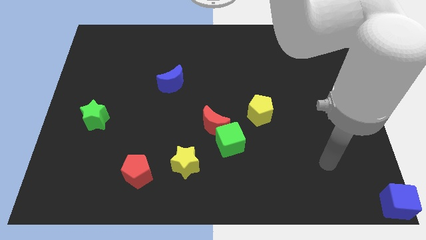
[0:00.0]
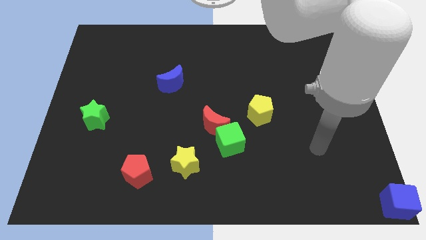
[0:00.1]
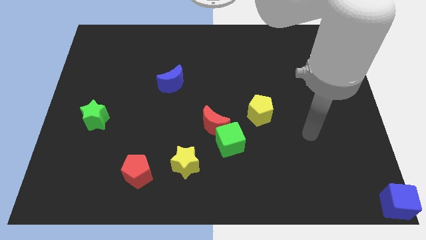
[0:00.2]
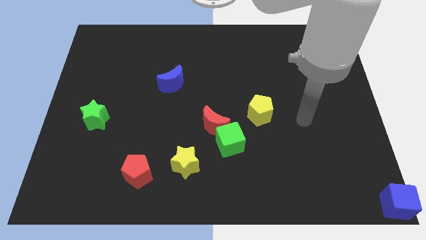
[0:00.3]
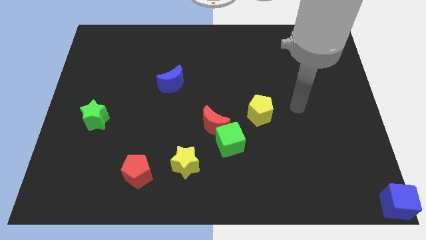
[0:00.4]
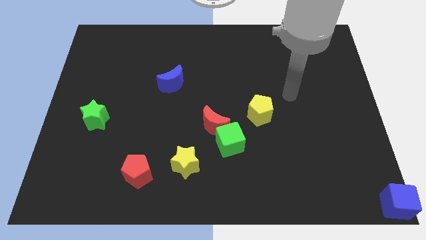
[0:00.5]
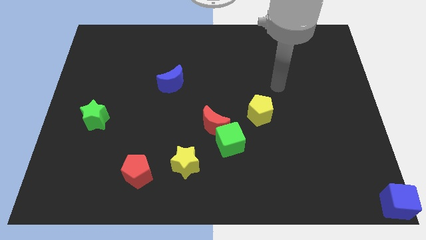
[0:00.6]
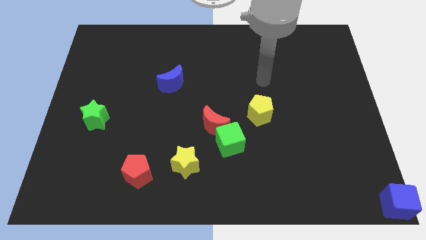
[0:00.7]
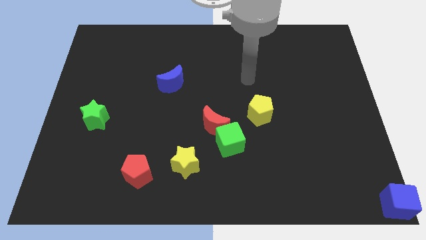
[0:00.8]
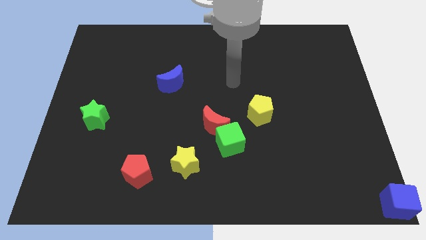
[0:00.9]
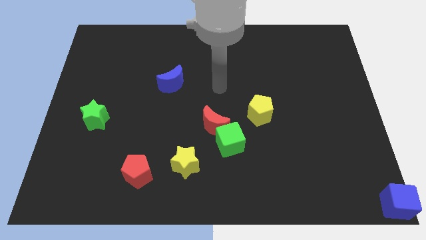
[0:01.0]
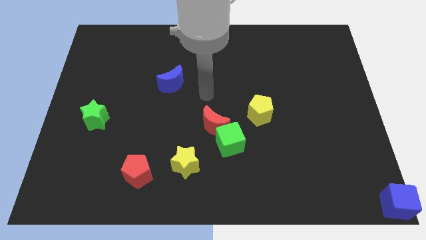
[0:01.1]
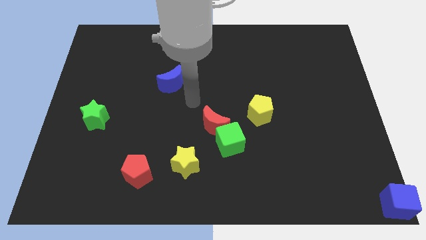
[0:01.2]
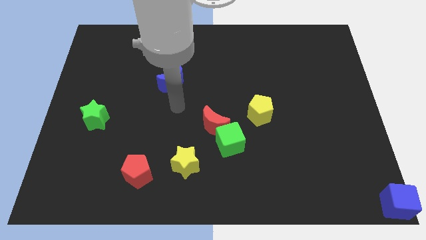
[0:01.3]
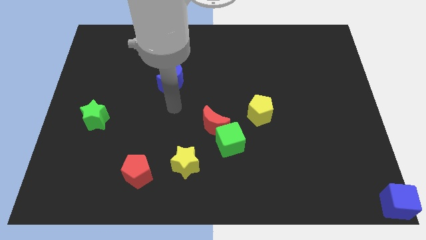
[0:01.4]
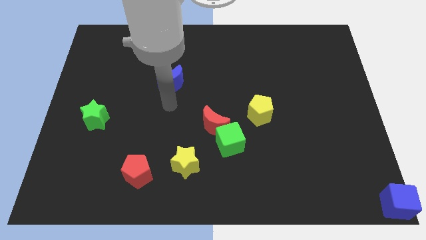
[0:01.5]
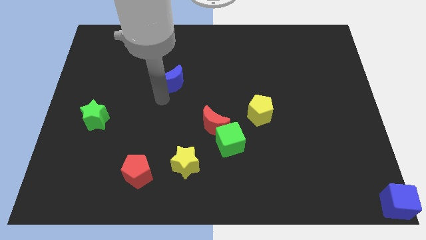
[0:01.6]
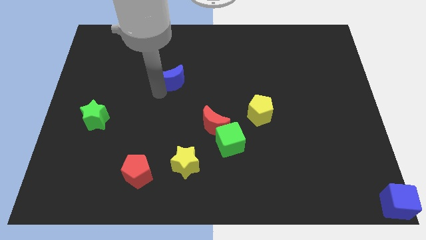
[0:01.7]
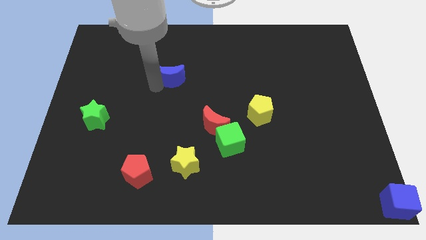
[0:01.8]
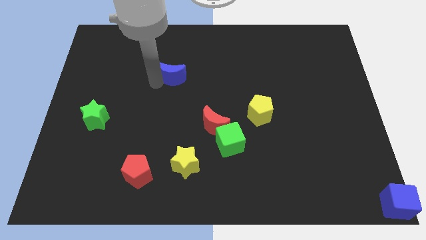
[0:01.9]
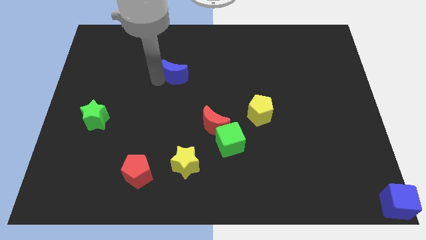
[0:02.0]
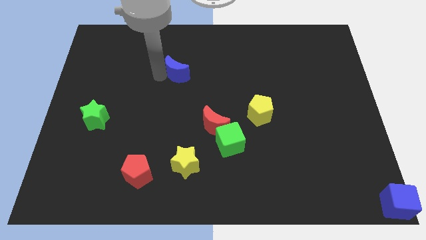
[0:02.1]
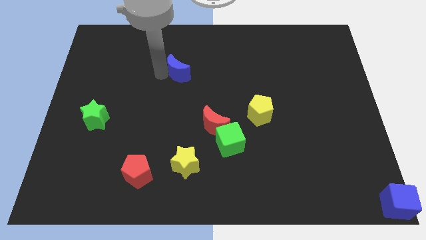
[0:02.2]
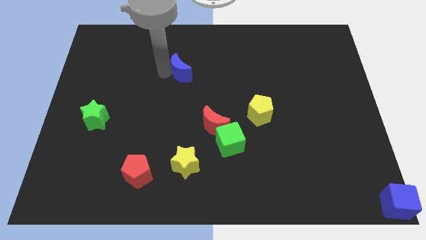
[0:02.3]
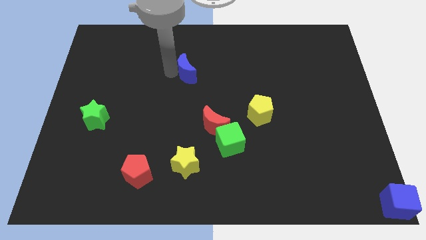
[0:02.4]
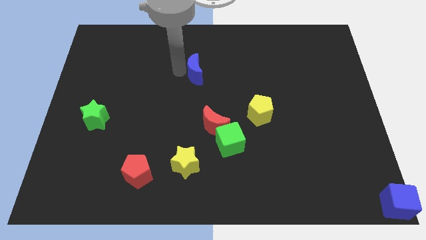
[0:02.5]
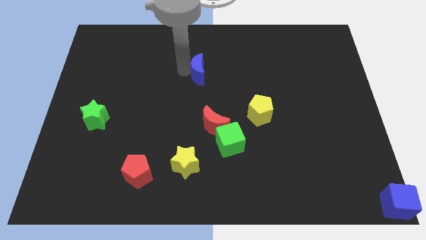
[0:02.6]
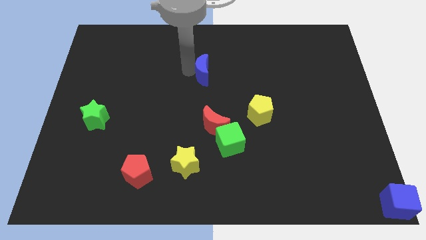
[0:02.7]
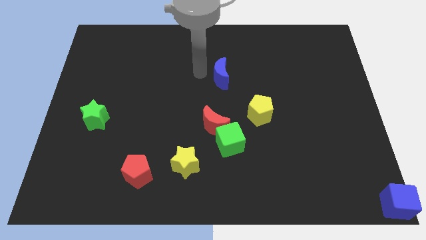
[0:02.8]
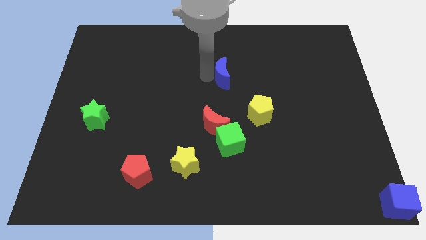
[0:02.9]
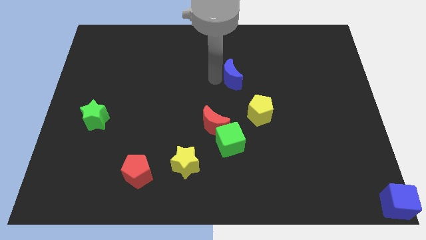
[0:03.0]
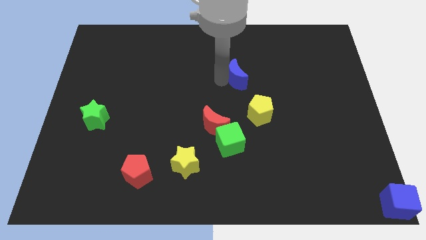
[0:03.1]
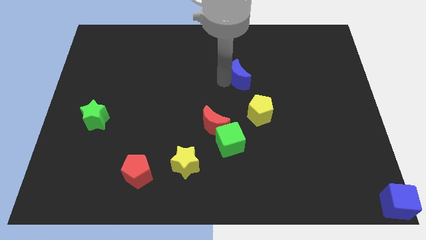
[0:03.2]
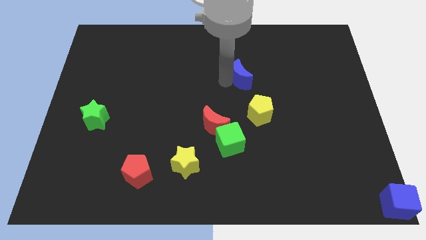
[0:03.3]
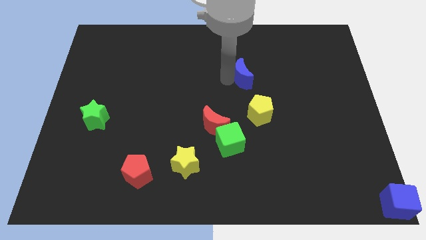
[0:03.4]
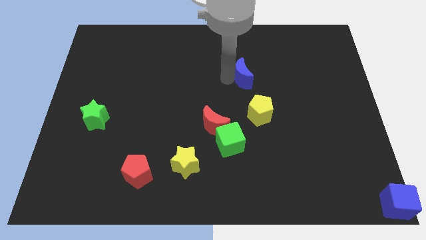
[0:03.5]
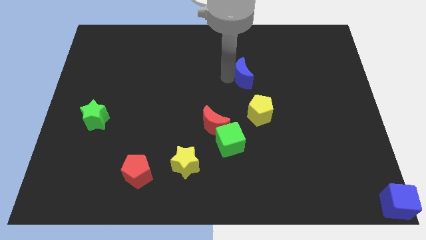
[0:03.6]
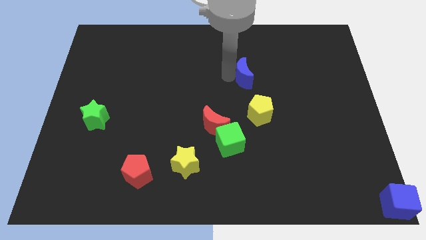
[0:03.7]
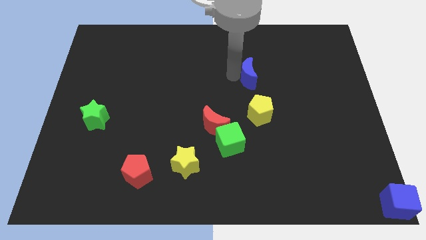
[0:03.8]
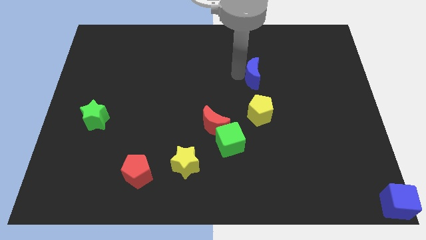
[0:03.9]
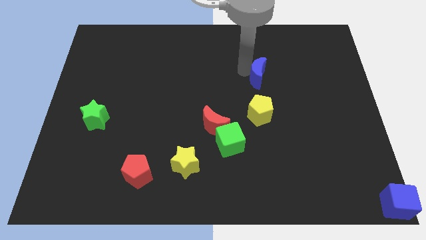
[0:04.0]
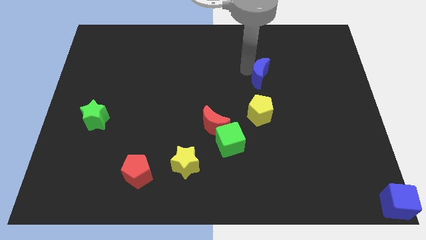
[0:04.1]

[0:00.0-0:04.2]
place the blue crescent above the yellow pentagon

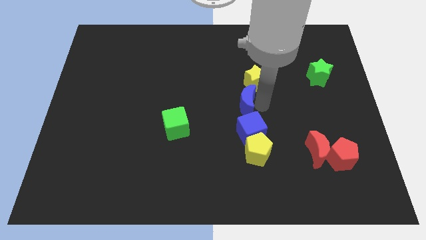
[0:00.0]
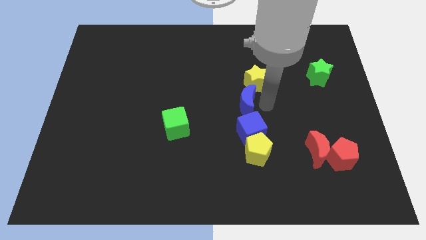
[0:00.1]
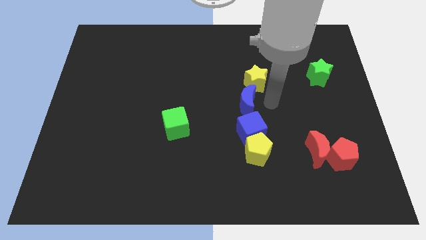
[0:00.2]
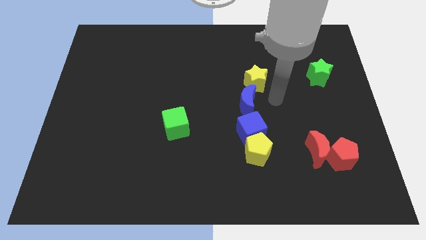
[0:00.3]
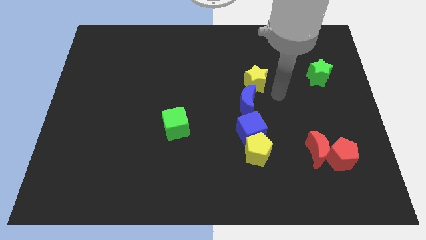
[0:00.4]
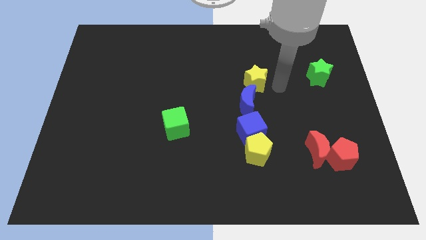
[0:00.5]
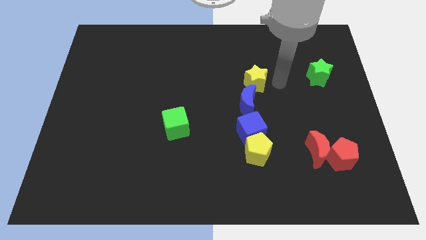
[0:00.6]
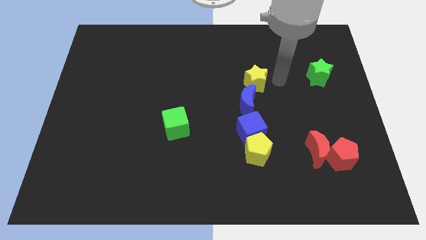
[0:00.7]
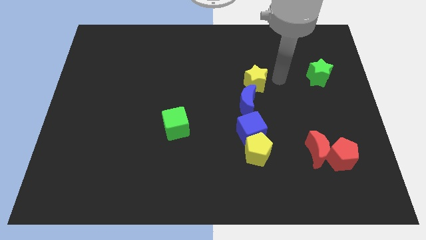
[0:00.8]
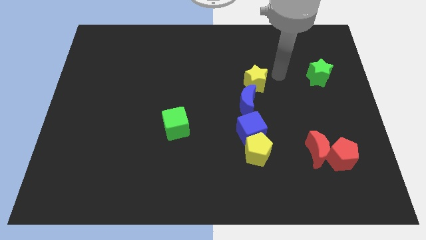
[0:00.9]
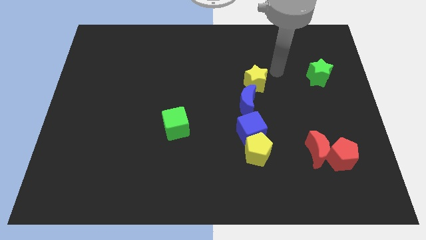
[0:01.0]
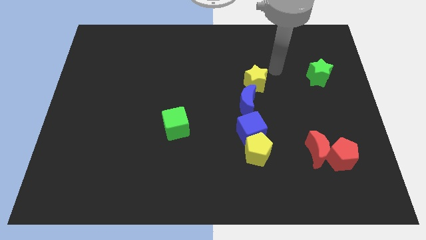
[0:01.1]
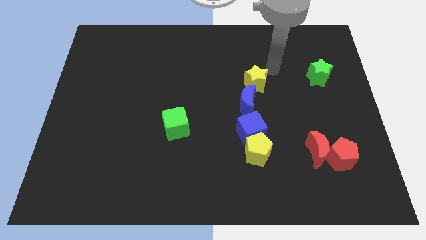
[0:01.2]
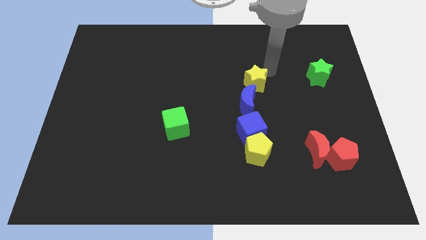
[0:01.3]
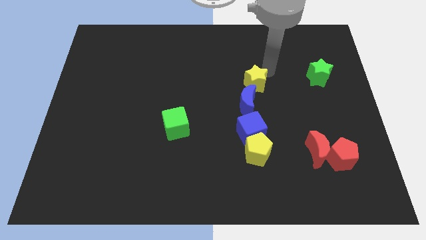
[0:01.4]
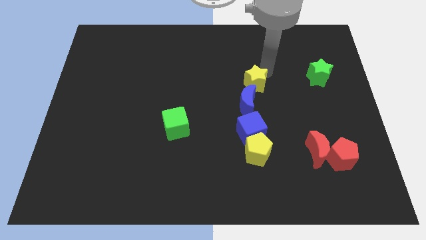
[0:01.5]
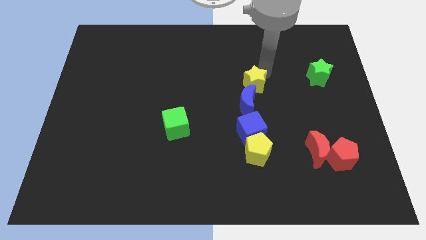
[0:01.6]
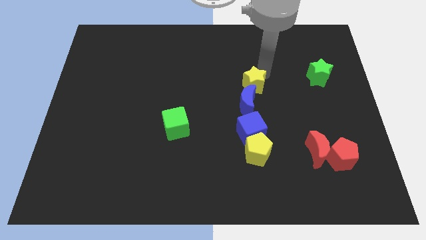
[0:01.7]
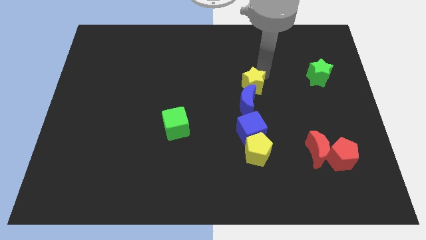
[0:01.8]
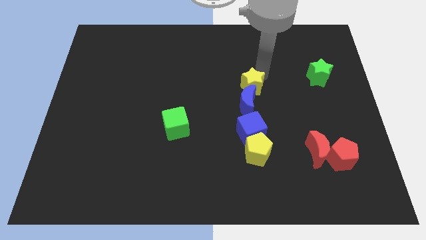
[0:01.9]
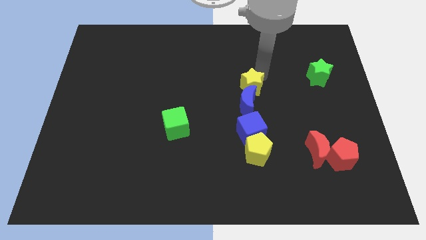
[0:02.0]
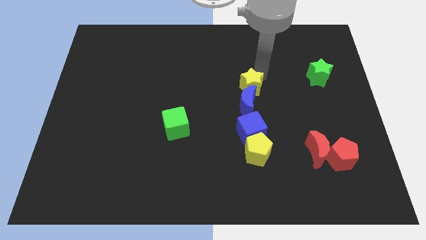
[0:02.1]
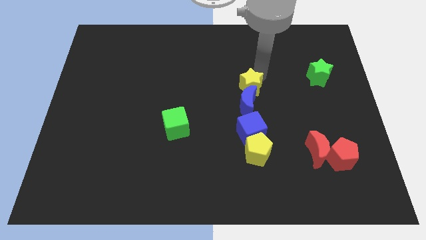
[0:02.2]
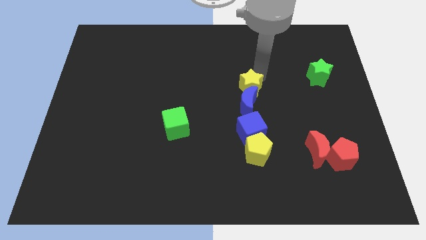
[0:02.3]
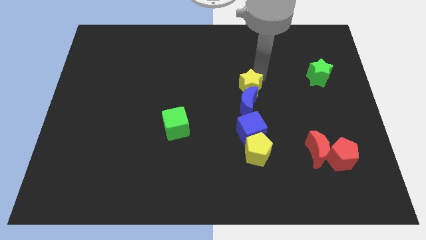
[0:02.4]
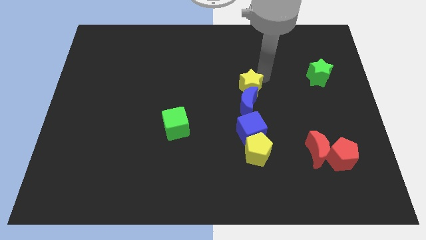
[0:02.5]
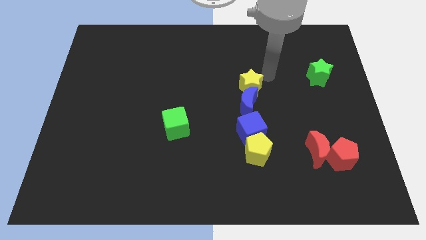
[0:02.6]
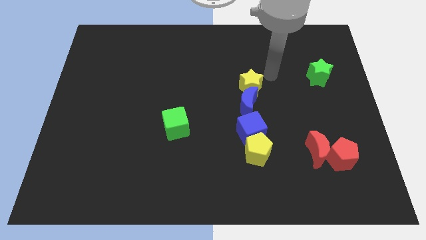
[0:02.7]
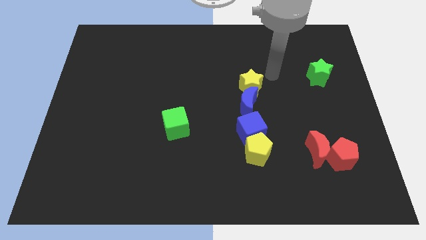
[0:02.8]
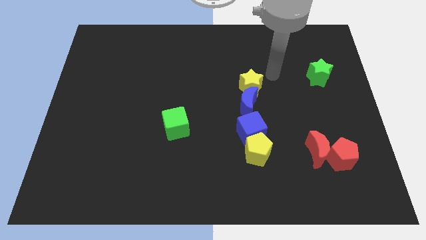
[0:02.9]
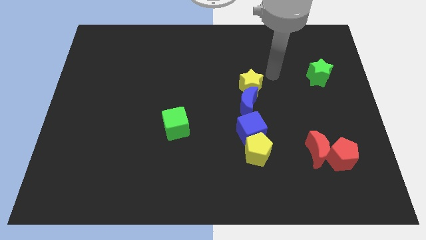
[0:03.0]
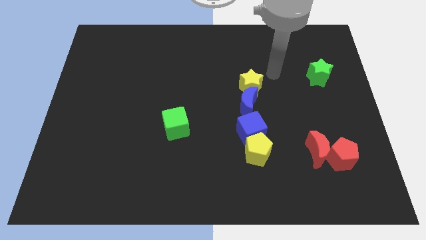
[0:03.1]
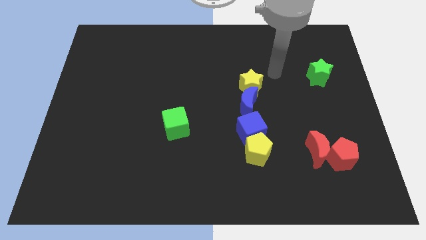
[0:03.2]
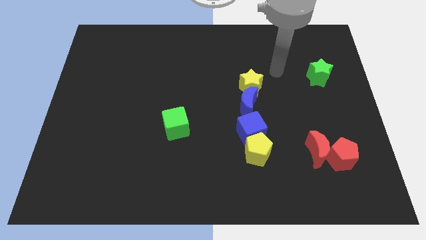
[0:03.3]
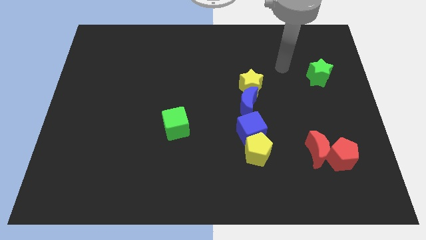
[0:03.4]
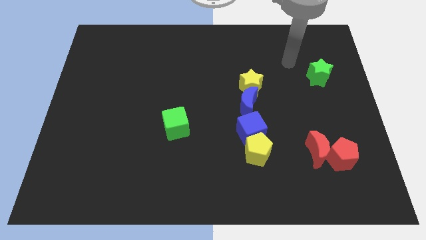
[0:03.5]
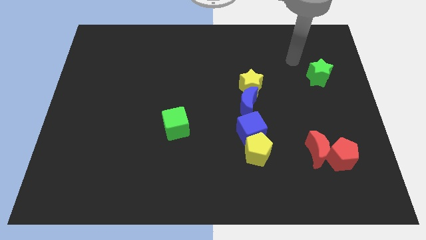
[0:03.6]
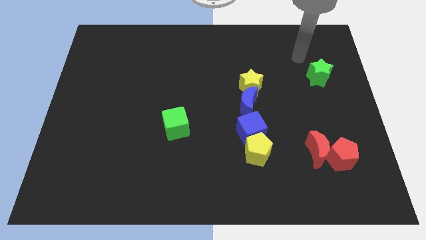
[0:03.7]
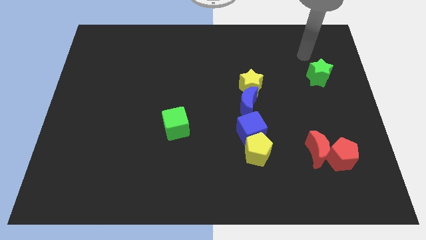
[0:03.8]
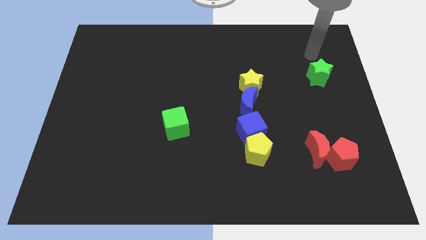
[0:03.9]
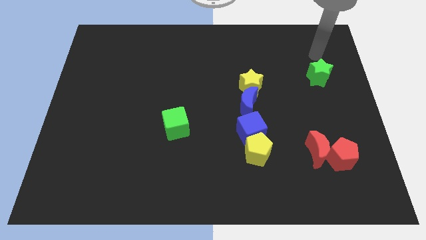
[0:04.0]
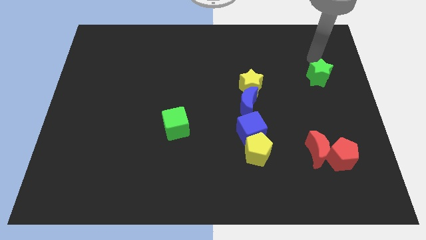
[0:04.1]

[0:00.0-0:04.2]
slightly push the yellow star into the blue crescent

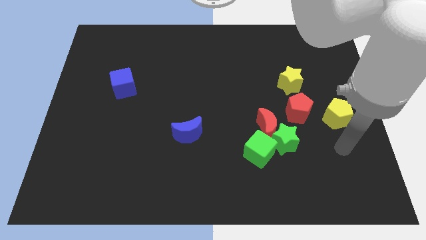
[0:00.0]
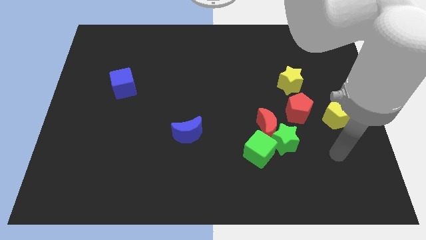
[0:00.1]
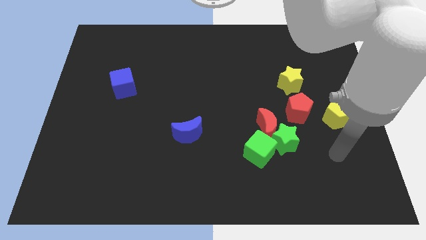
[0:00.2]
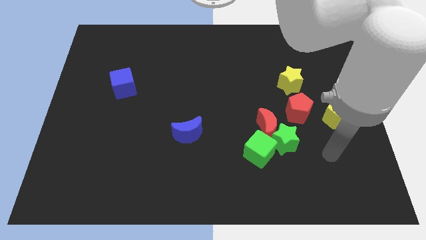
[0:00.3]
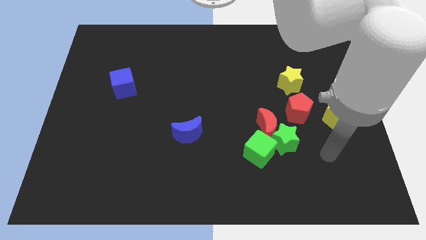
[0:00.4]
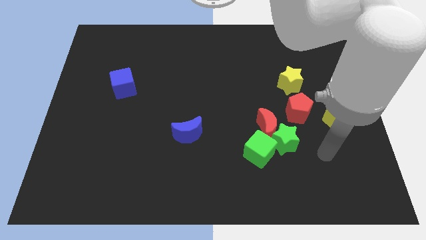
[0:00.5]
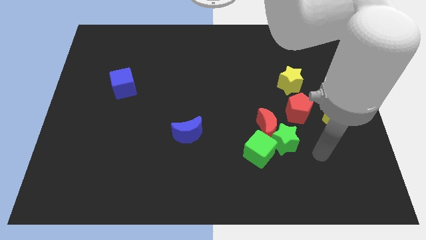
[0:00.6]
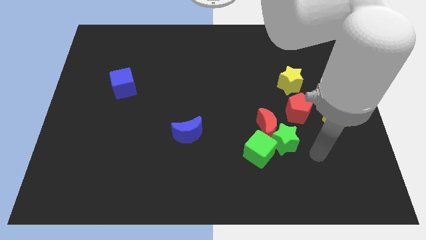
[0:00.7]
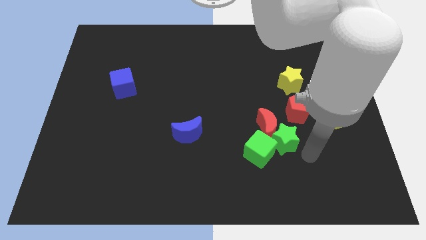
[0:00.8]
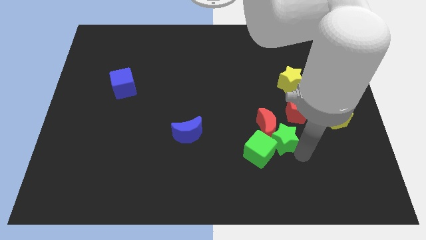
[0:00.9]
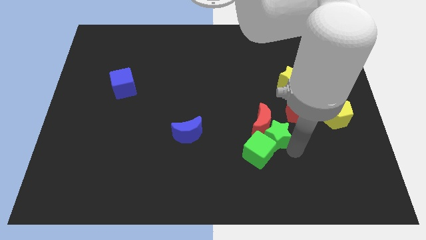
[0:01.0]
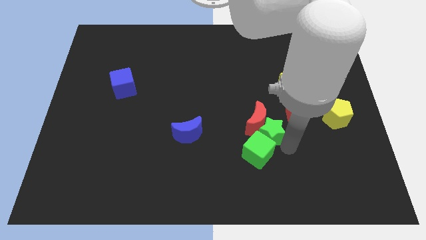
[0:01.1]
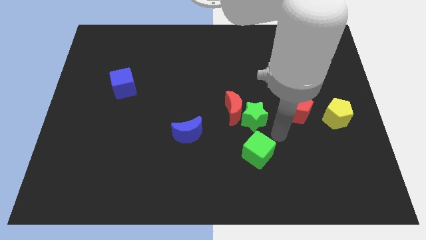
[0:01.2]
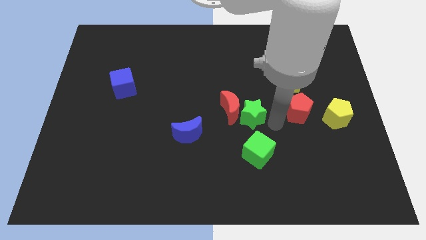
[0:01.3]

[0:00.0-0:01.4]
push the green star slightly towards the red moon
